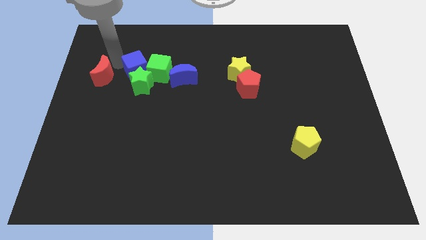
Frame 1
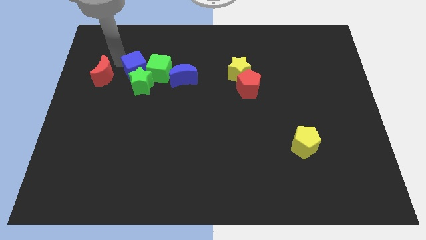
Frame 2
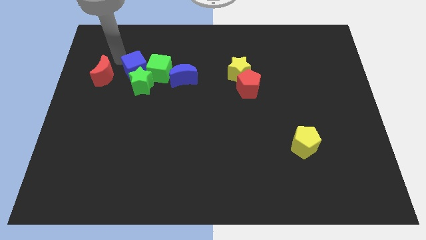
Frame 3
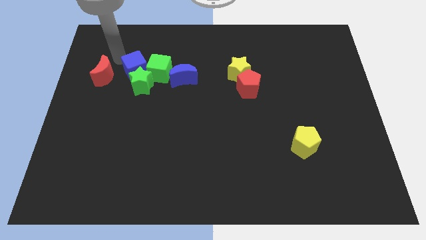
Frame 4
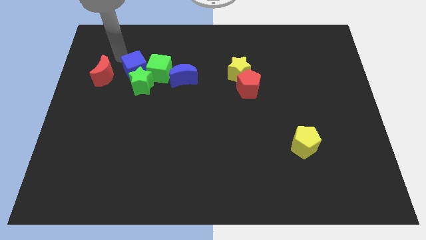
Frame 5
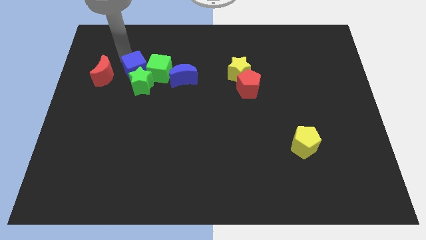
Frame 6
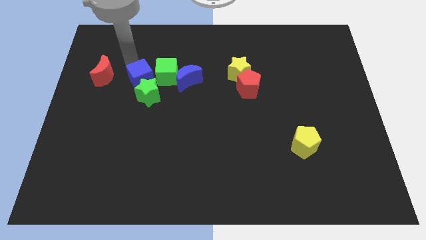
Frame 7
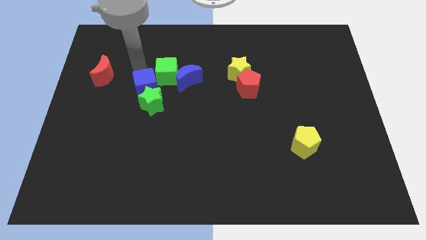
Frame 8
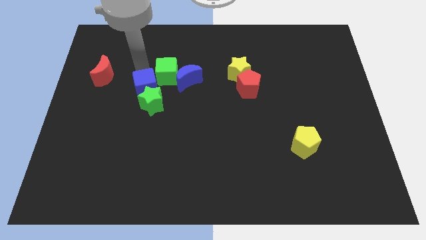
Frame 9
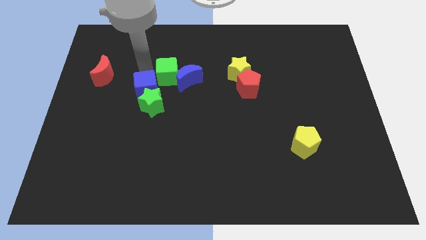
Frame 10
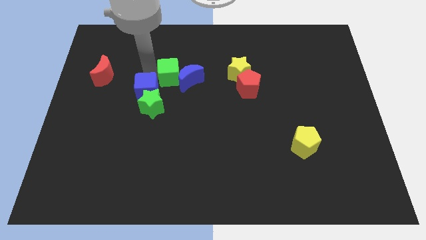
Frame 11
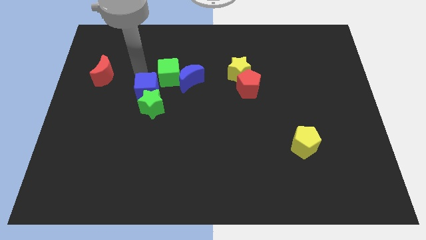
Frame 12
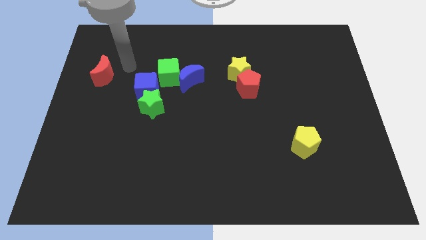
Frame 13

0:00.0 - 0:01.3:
slightly push the blue cube along with the green star towards bottom side

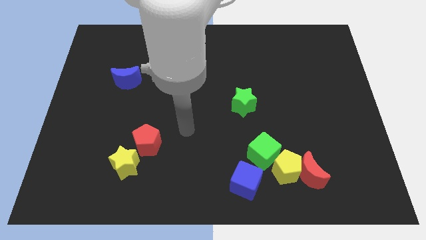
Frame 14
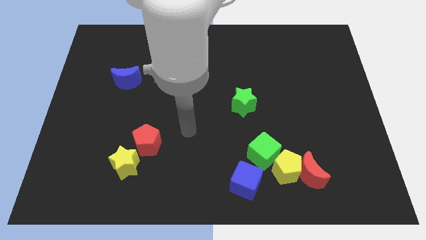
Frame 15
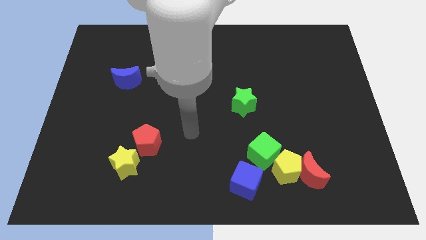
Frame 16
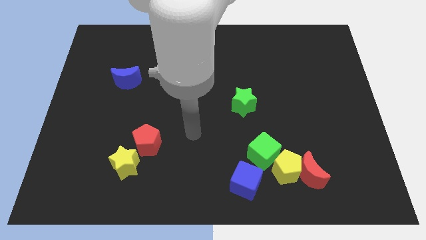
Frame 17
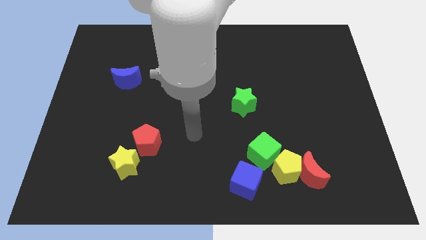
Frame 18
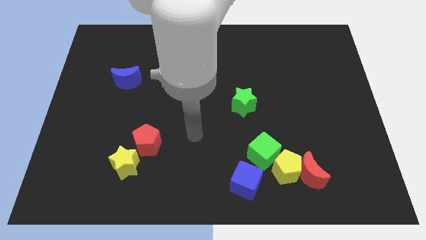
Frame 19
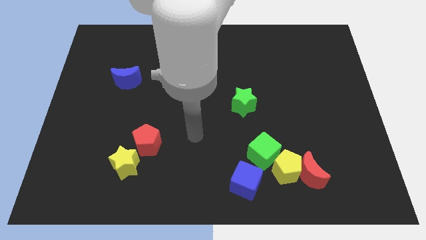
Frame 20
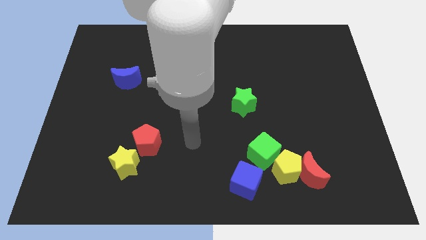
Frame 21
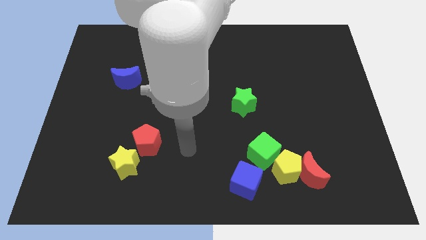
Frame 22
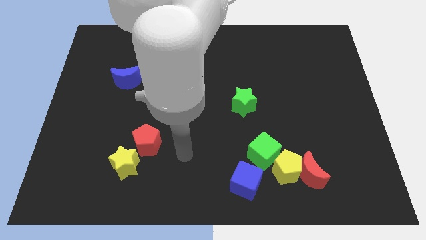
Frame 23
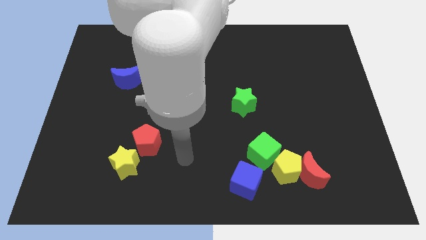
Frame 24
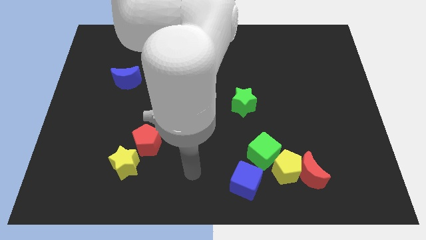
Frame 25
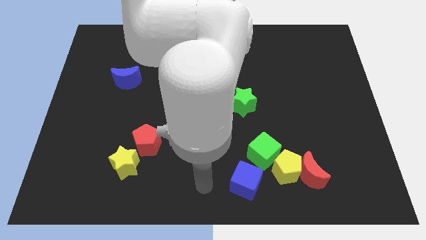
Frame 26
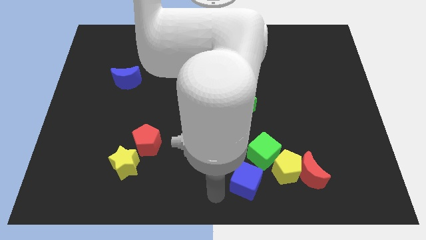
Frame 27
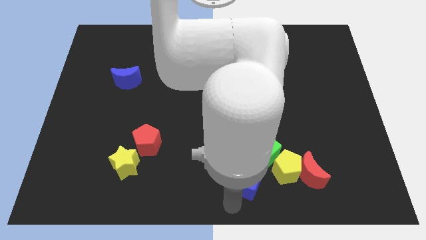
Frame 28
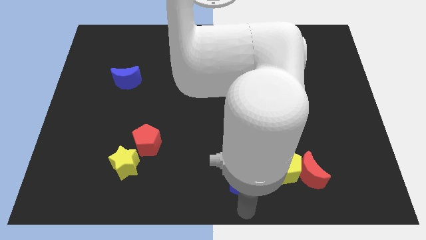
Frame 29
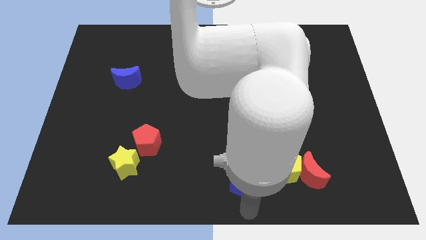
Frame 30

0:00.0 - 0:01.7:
move the arm at the bottom of the blue cube

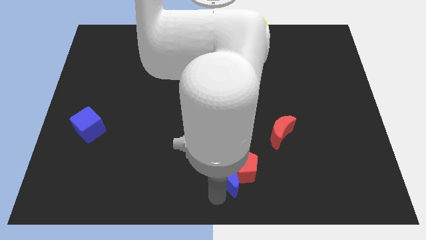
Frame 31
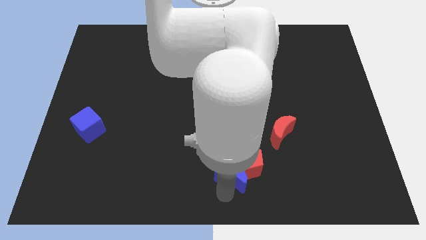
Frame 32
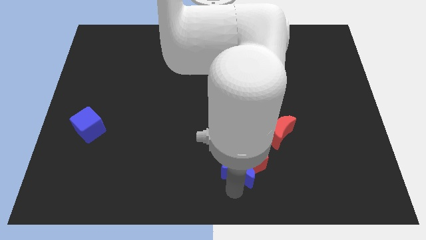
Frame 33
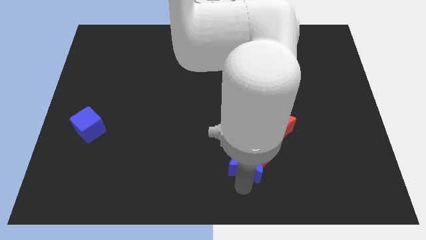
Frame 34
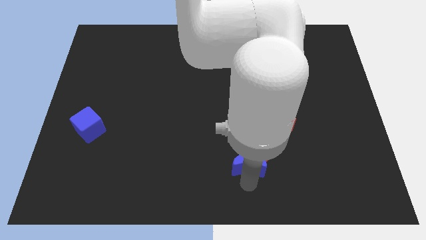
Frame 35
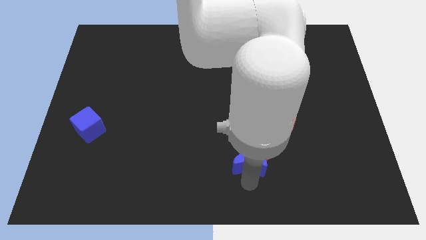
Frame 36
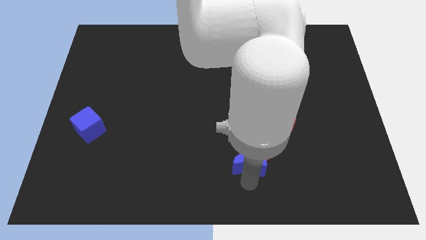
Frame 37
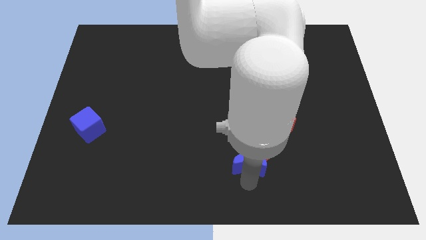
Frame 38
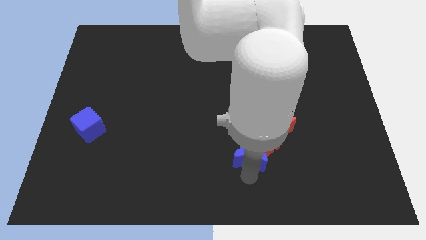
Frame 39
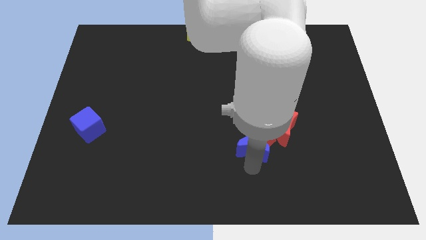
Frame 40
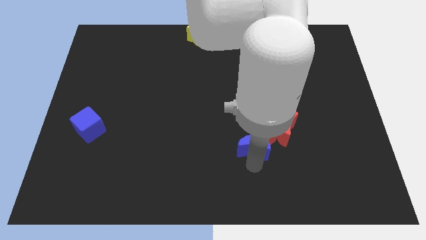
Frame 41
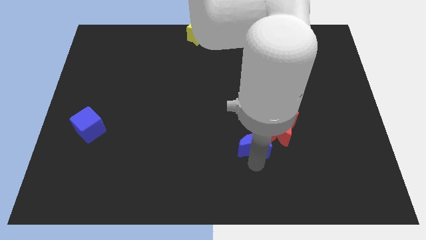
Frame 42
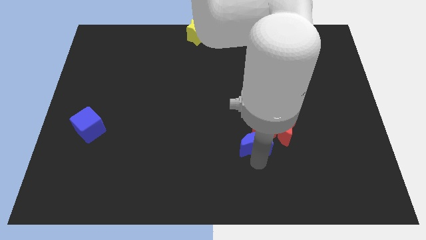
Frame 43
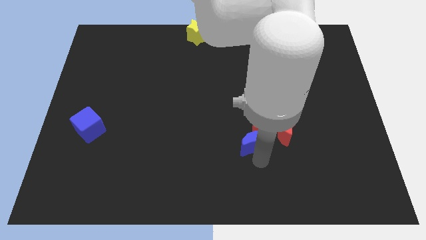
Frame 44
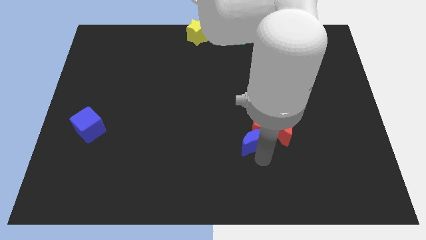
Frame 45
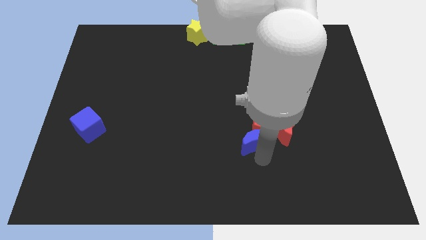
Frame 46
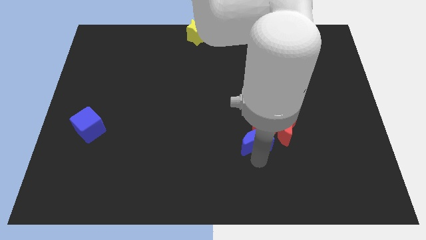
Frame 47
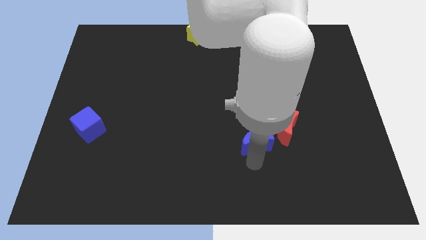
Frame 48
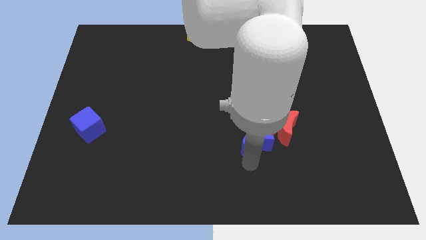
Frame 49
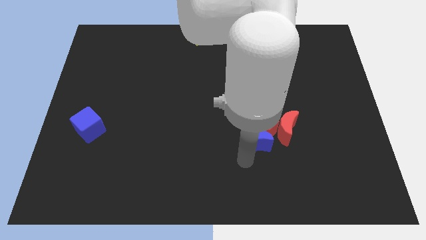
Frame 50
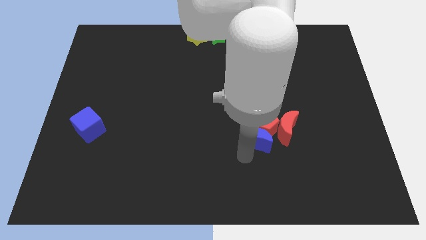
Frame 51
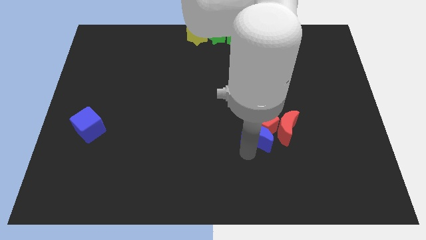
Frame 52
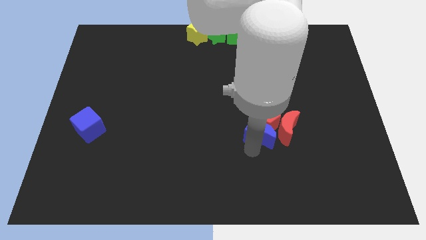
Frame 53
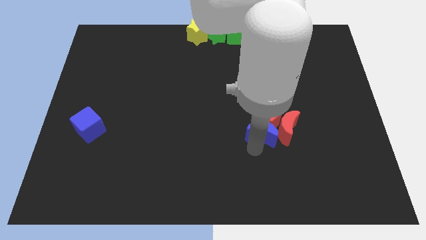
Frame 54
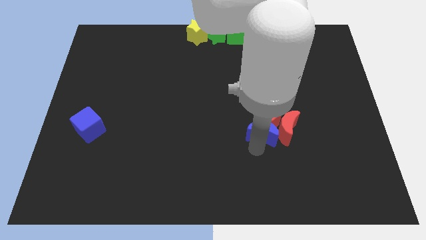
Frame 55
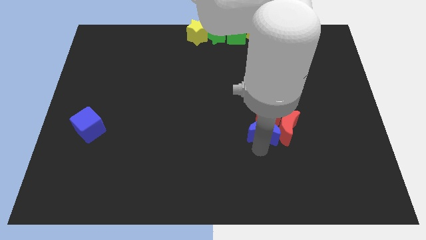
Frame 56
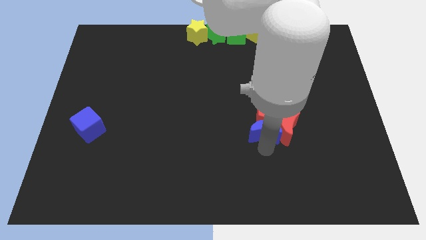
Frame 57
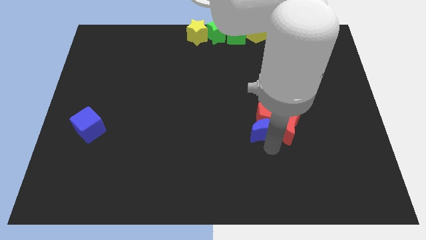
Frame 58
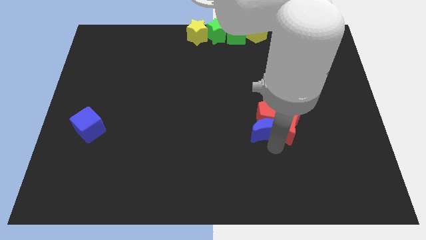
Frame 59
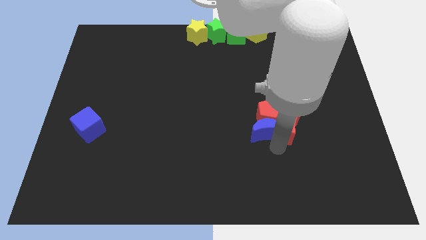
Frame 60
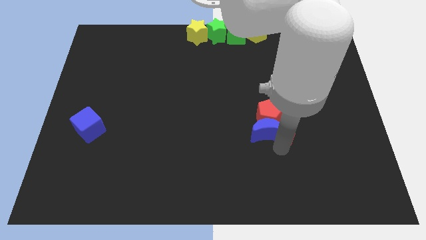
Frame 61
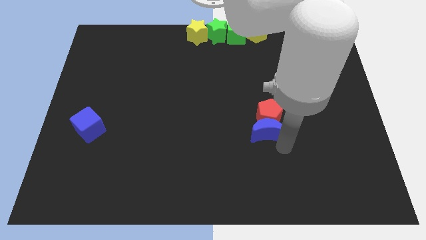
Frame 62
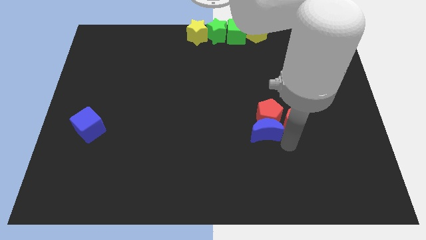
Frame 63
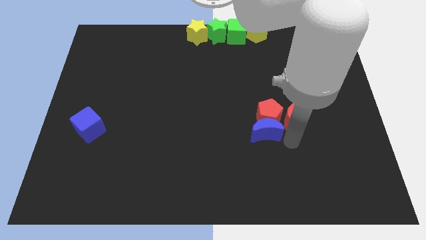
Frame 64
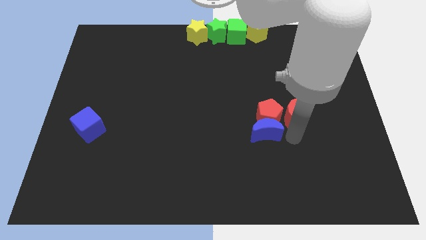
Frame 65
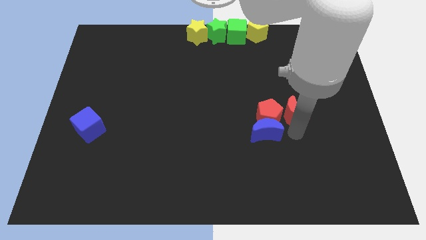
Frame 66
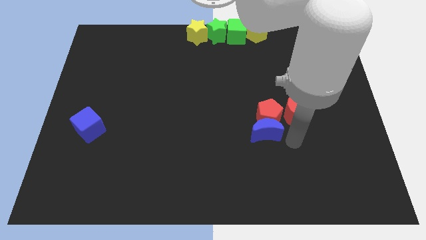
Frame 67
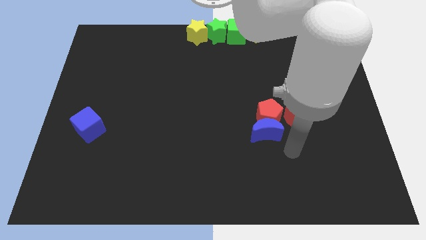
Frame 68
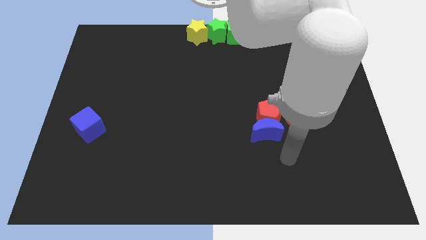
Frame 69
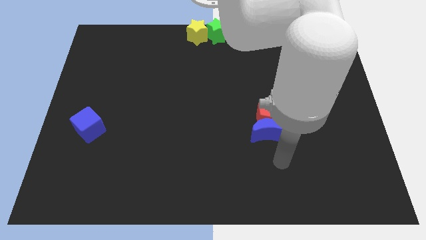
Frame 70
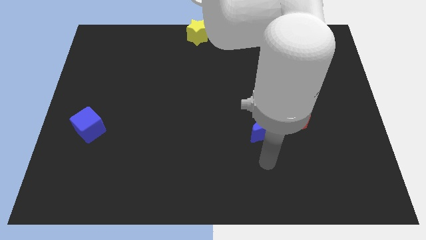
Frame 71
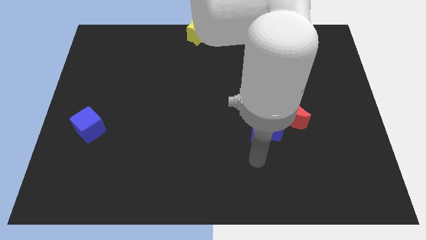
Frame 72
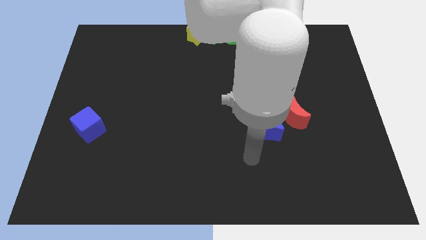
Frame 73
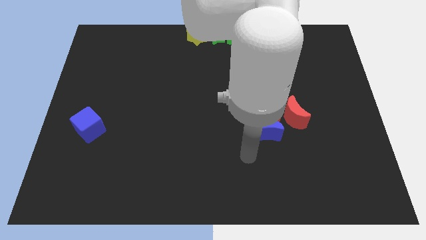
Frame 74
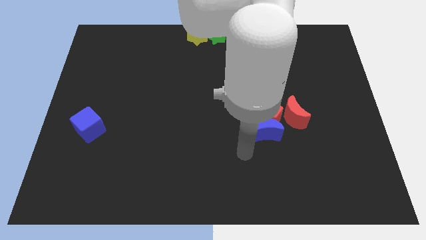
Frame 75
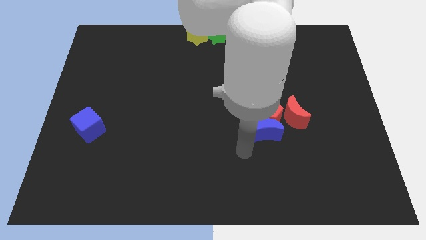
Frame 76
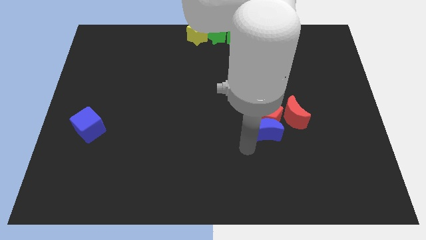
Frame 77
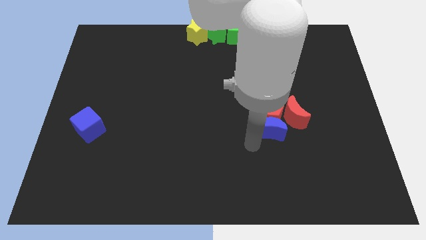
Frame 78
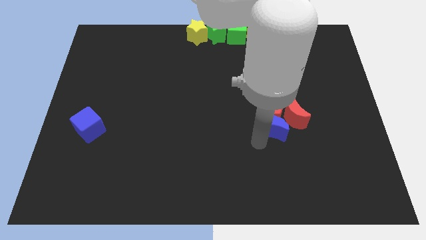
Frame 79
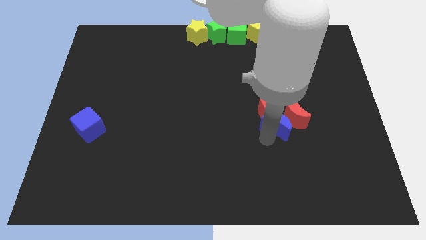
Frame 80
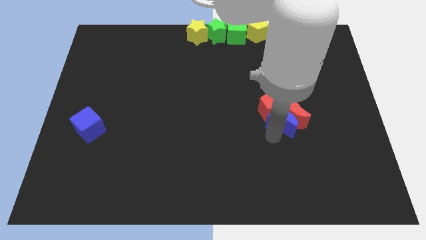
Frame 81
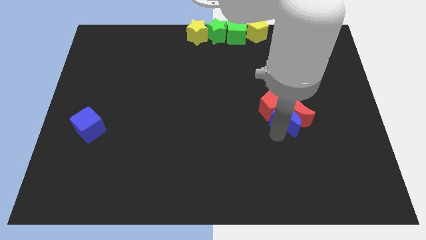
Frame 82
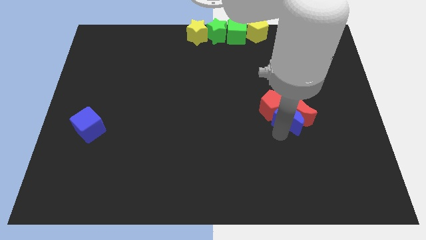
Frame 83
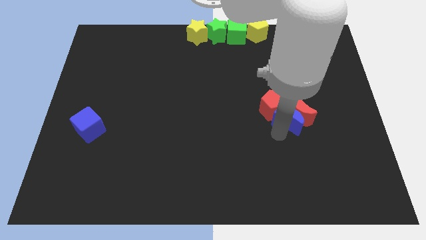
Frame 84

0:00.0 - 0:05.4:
move the red crescent along with the red crescent to the right center of the board

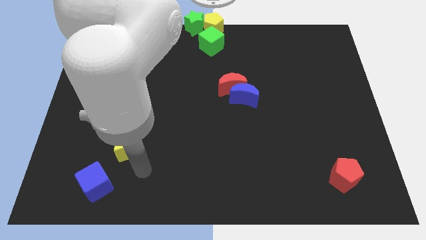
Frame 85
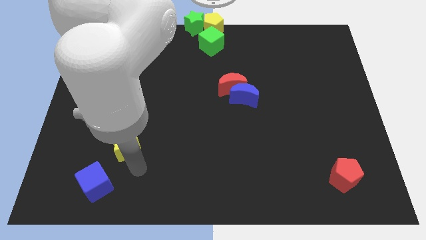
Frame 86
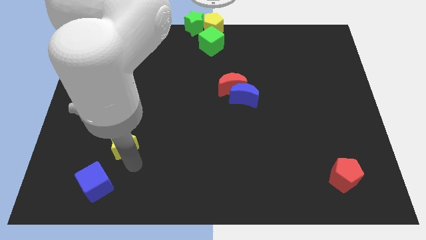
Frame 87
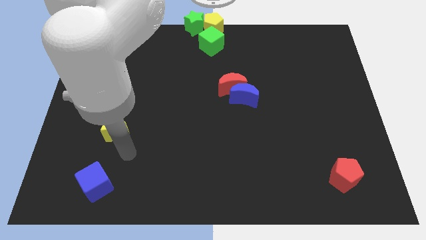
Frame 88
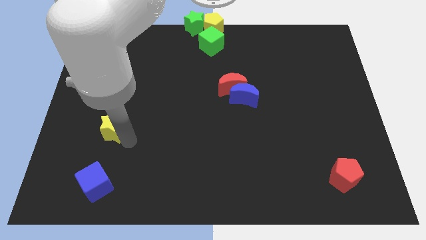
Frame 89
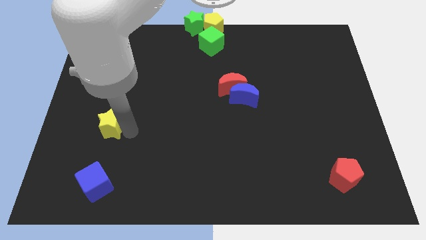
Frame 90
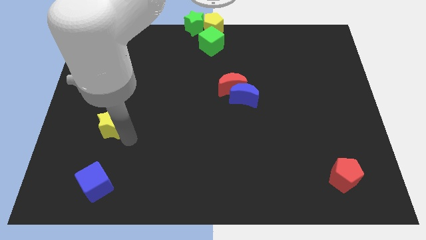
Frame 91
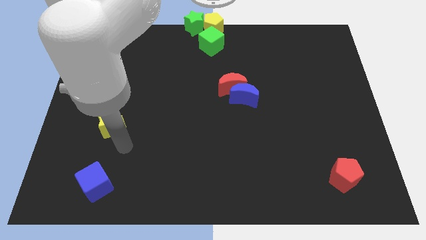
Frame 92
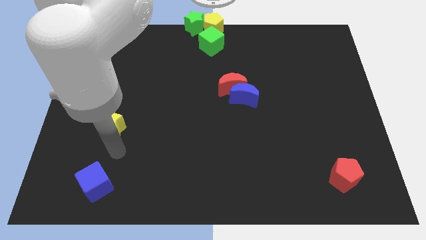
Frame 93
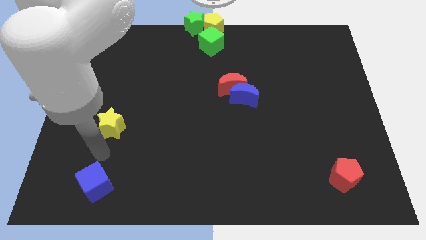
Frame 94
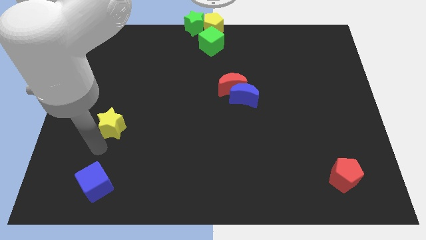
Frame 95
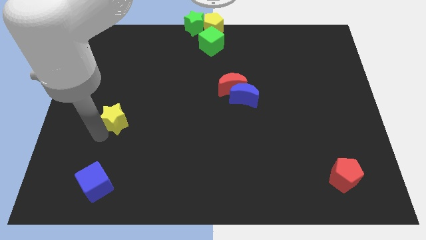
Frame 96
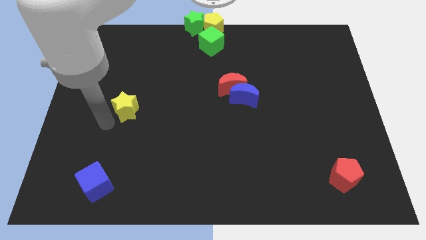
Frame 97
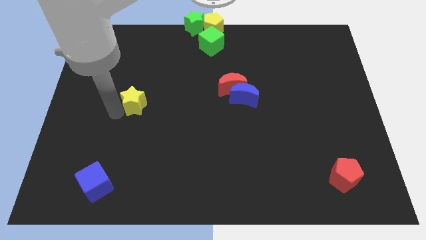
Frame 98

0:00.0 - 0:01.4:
push the yellow star towards the top
